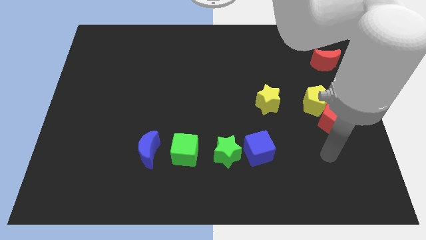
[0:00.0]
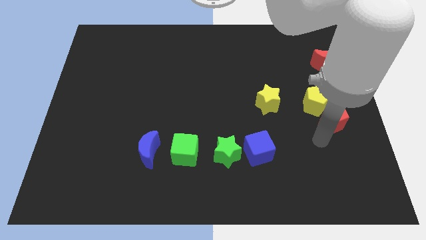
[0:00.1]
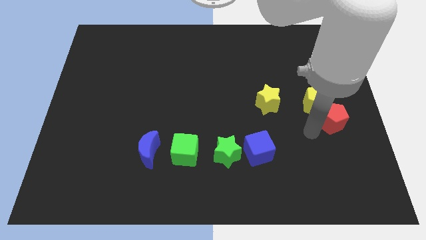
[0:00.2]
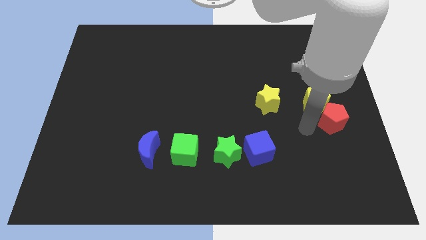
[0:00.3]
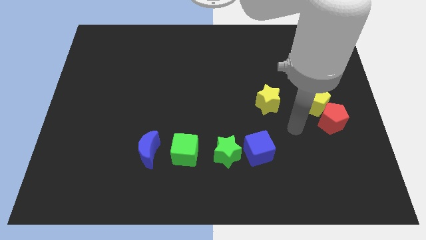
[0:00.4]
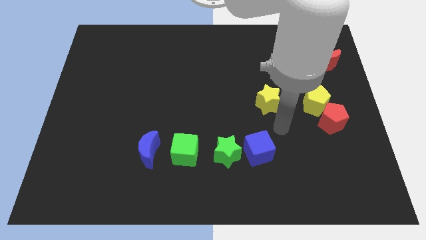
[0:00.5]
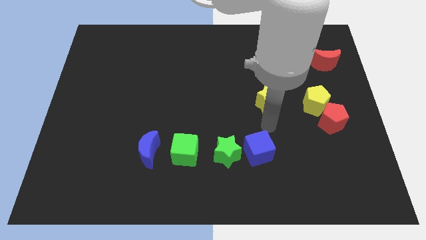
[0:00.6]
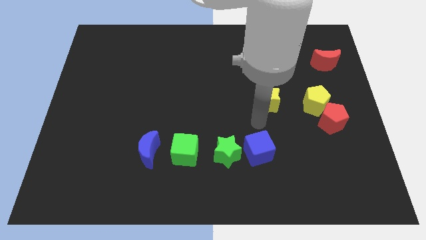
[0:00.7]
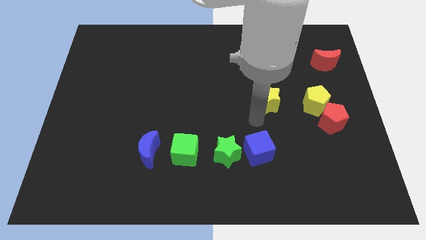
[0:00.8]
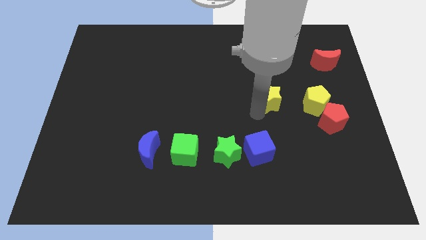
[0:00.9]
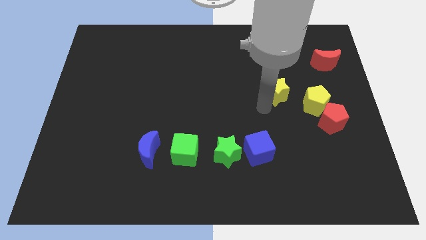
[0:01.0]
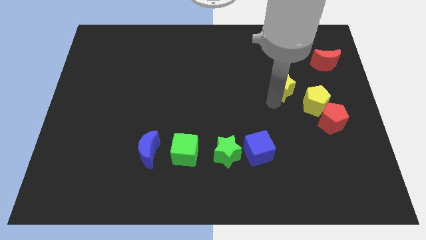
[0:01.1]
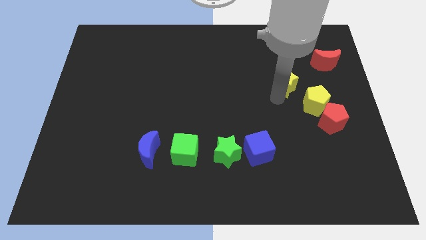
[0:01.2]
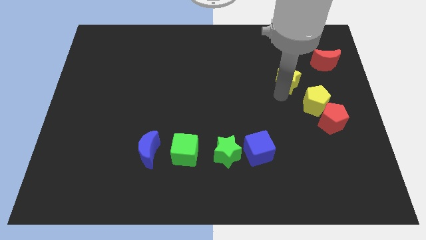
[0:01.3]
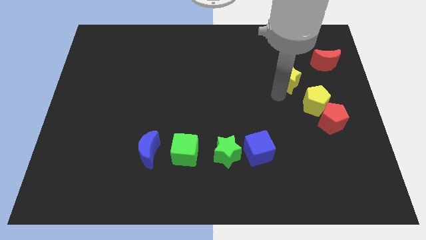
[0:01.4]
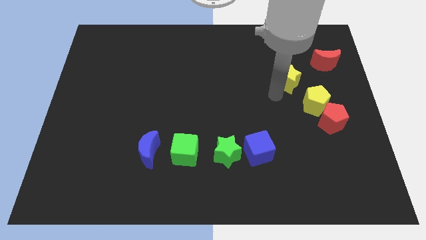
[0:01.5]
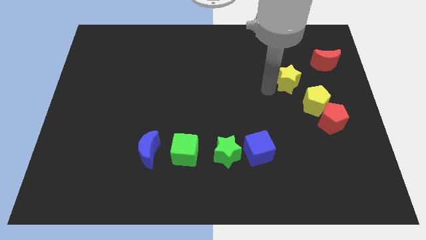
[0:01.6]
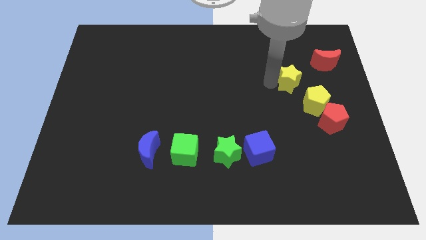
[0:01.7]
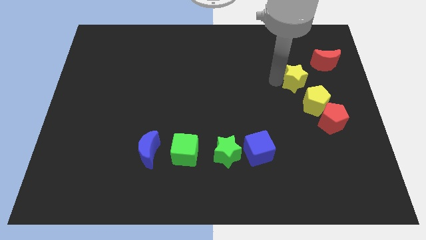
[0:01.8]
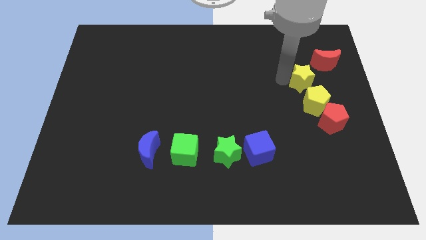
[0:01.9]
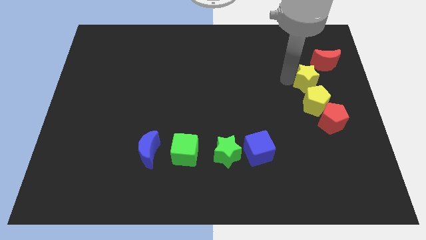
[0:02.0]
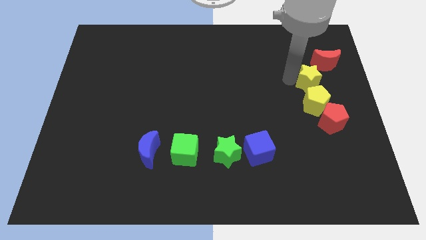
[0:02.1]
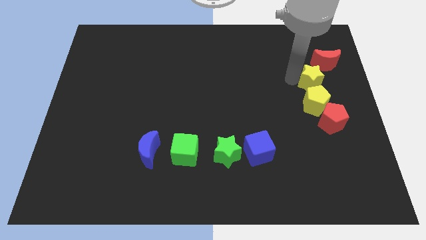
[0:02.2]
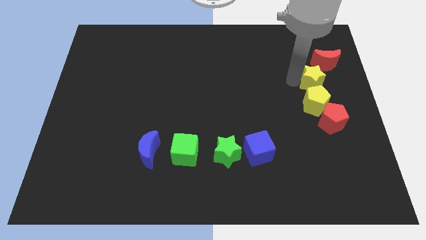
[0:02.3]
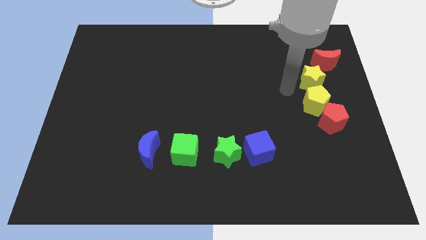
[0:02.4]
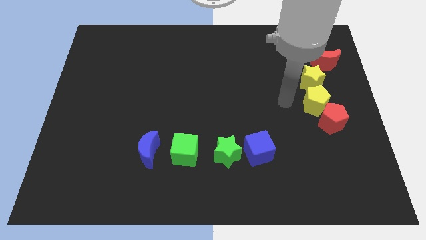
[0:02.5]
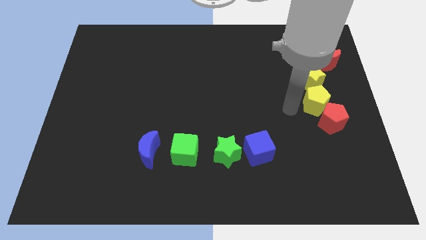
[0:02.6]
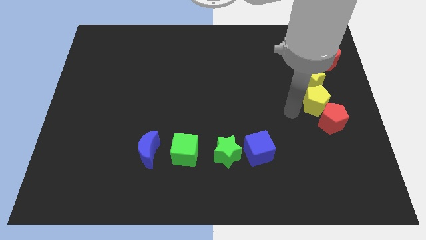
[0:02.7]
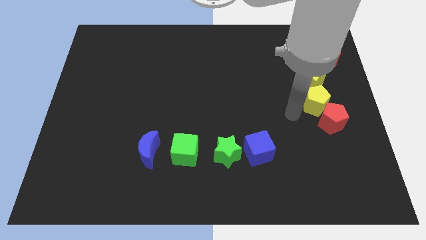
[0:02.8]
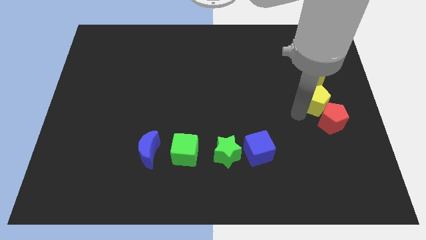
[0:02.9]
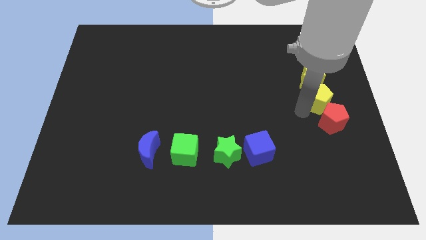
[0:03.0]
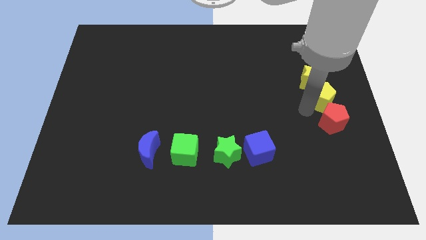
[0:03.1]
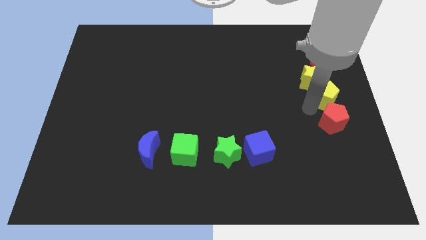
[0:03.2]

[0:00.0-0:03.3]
move the yellow star on top of the yellow pentagon

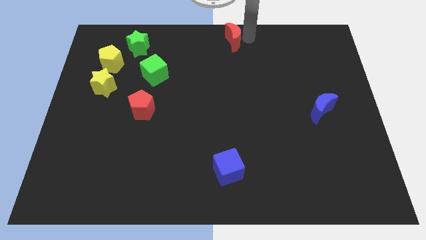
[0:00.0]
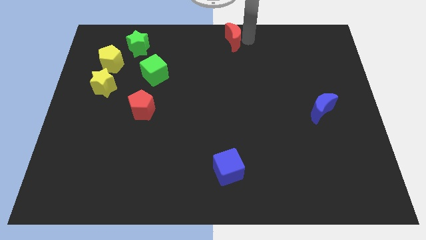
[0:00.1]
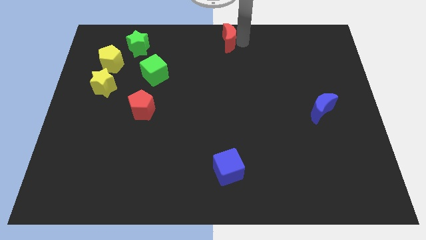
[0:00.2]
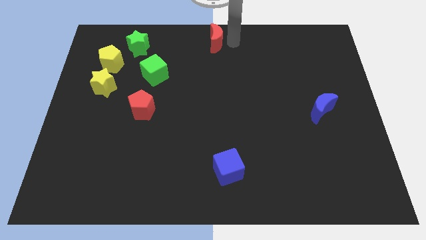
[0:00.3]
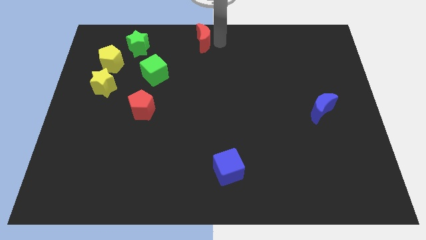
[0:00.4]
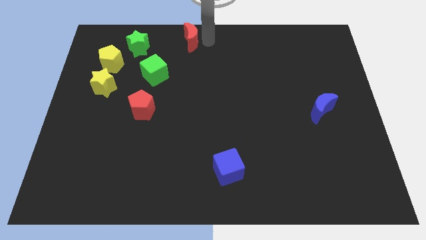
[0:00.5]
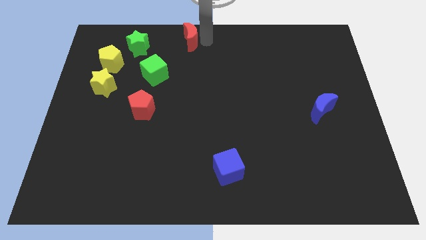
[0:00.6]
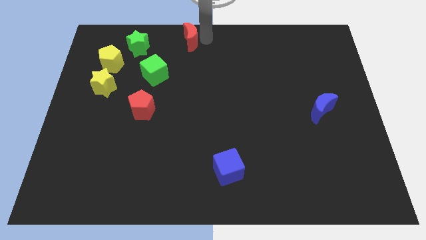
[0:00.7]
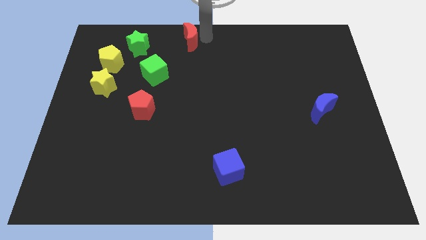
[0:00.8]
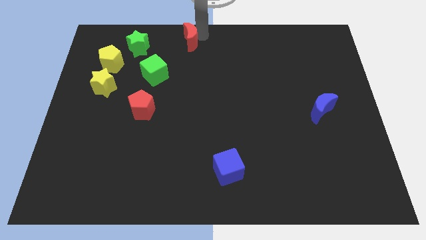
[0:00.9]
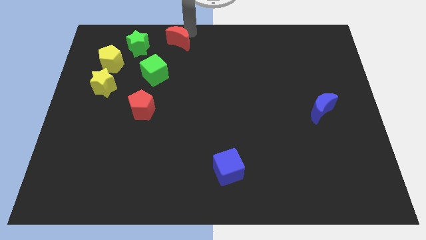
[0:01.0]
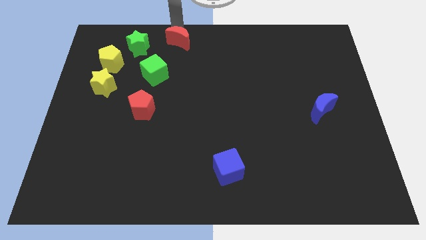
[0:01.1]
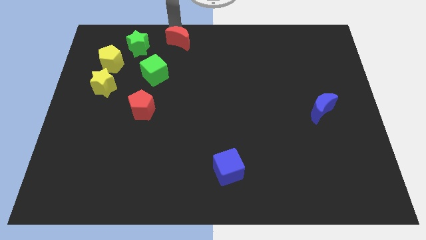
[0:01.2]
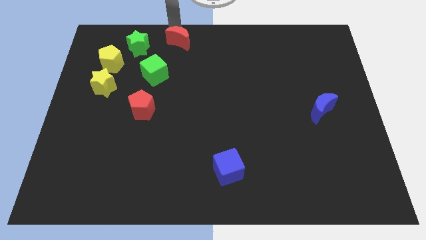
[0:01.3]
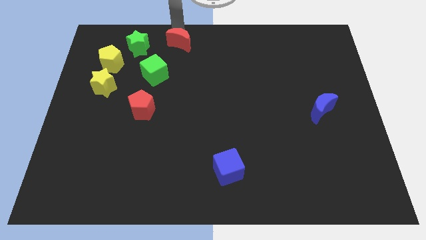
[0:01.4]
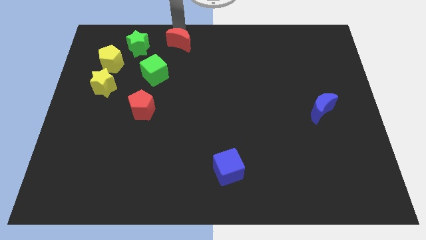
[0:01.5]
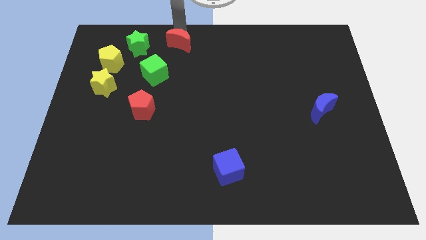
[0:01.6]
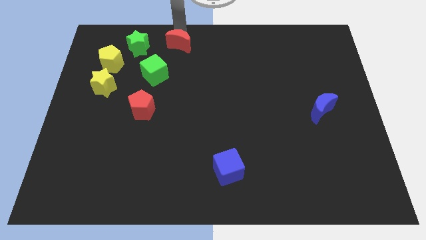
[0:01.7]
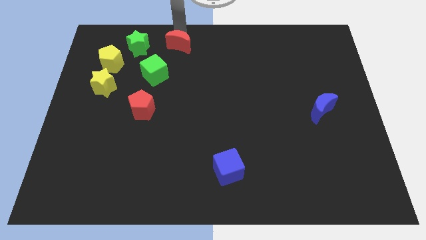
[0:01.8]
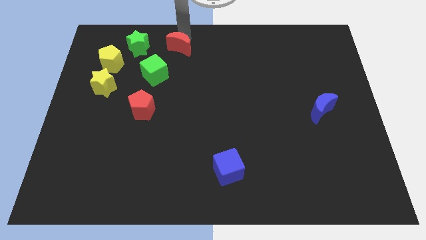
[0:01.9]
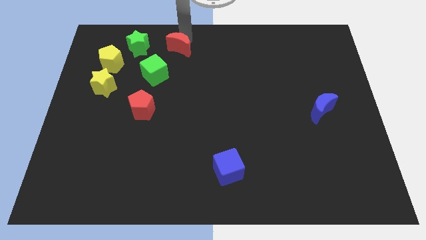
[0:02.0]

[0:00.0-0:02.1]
place red crescent near to green star

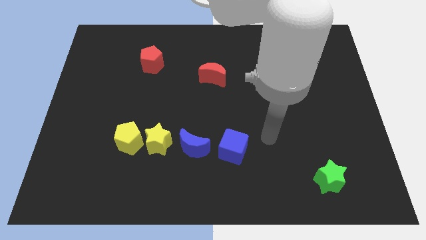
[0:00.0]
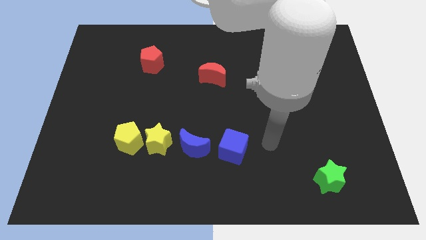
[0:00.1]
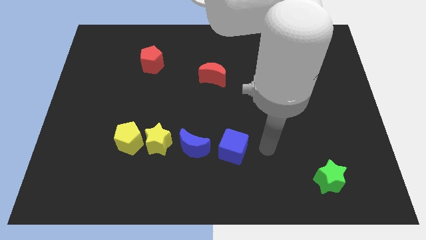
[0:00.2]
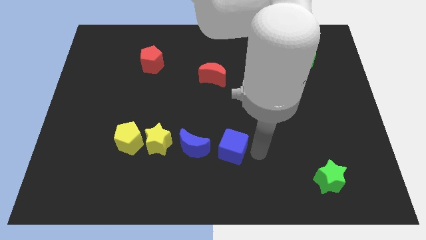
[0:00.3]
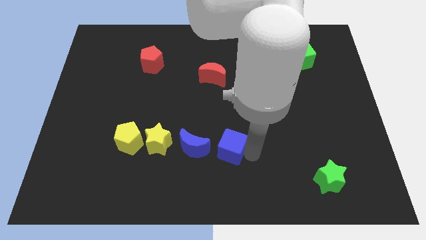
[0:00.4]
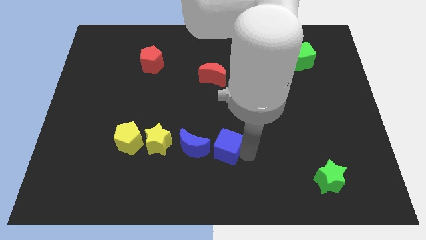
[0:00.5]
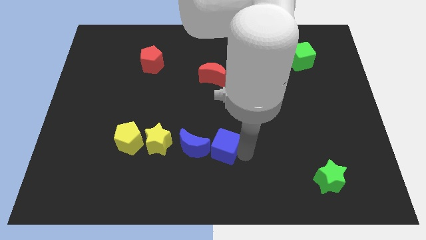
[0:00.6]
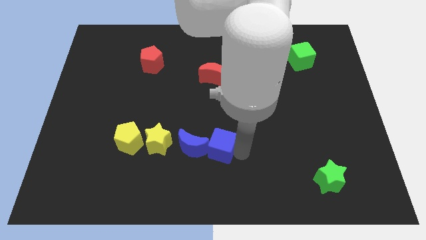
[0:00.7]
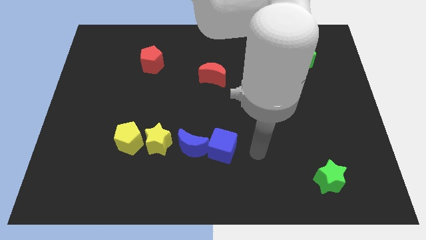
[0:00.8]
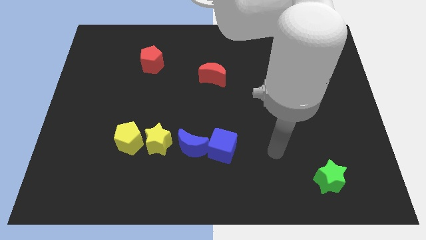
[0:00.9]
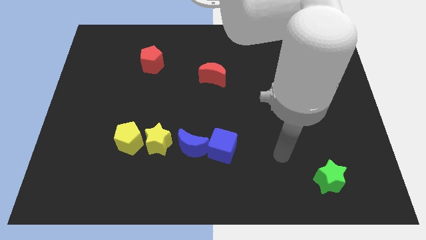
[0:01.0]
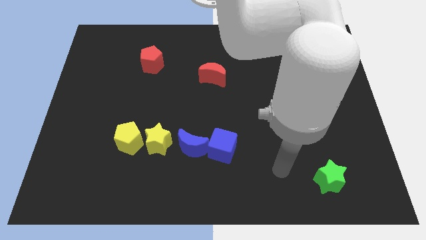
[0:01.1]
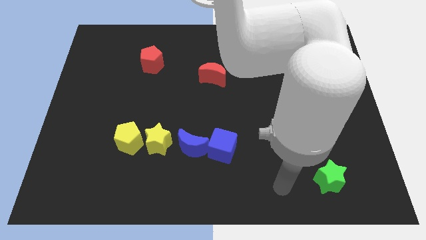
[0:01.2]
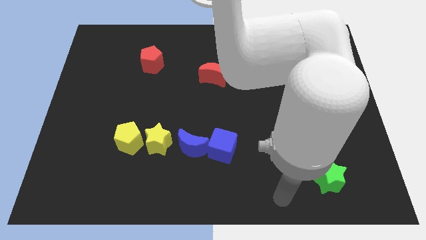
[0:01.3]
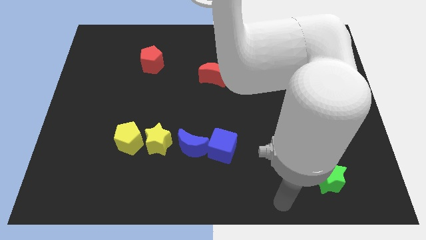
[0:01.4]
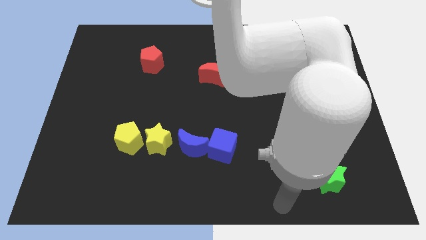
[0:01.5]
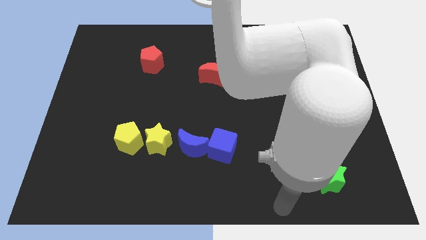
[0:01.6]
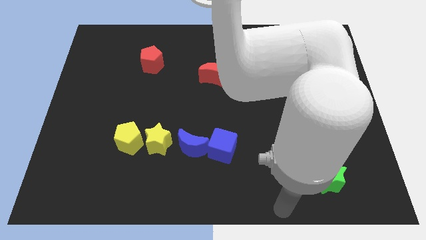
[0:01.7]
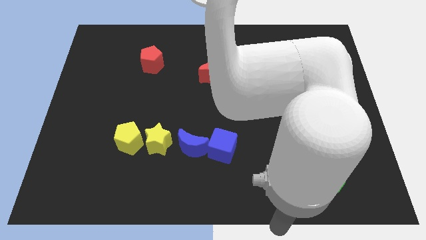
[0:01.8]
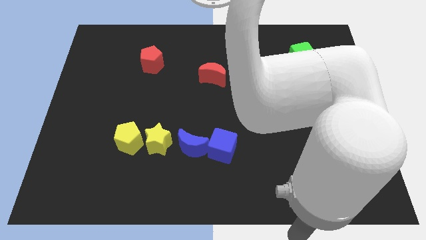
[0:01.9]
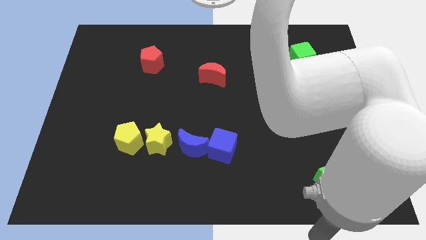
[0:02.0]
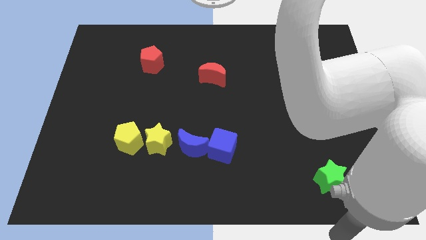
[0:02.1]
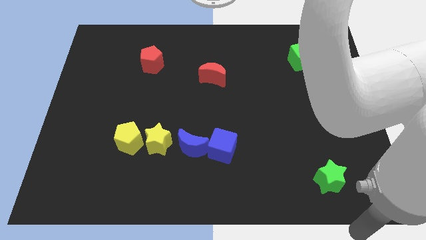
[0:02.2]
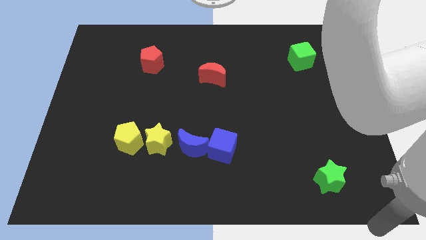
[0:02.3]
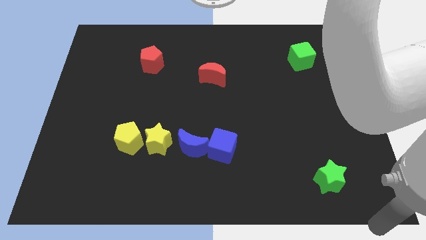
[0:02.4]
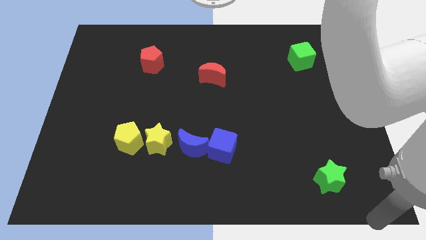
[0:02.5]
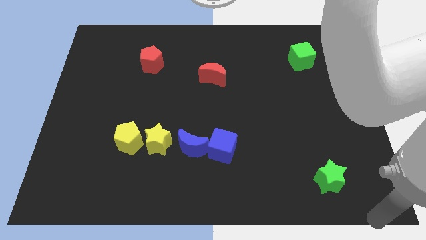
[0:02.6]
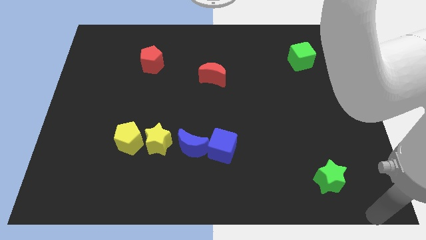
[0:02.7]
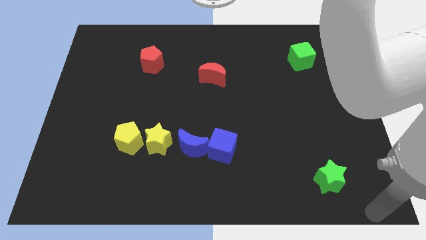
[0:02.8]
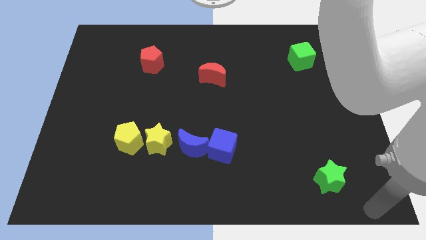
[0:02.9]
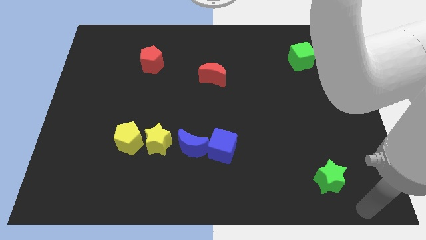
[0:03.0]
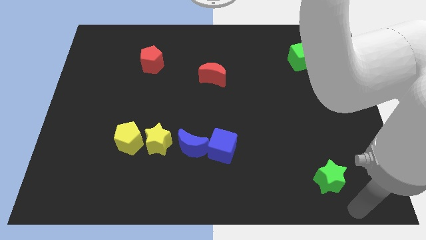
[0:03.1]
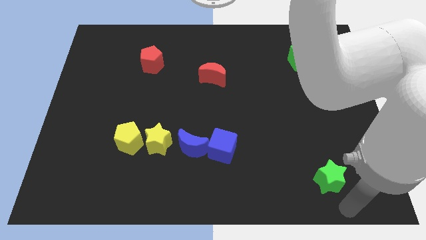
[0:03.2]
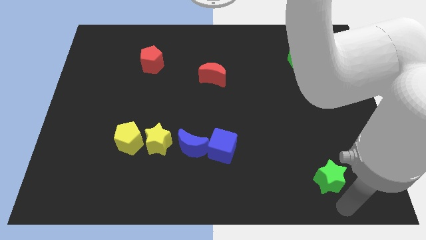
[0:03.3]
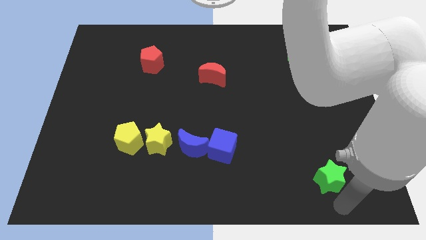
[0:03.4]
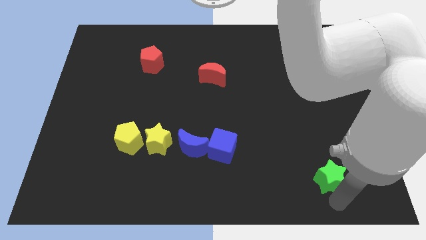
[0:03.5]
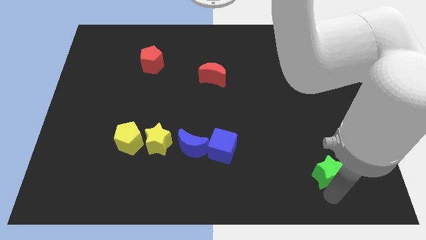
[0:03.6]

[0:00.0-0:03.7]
go near green star
